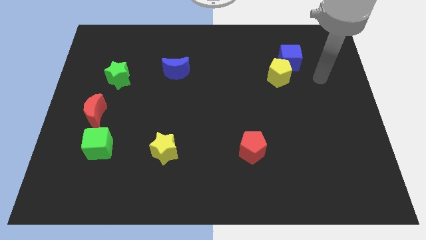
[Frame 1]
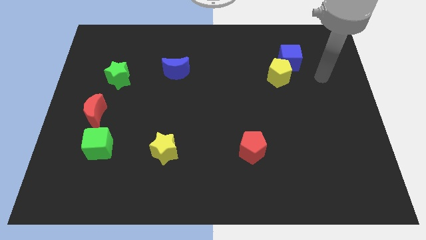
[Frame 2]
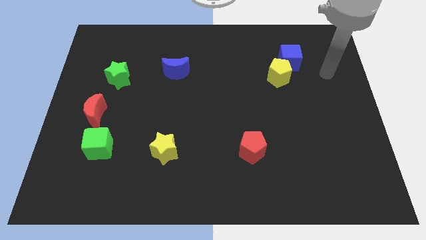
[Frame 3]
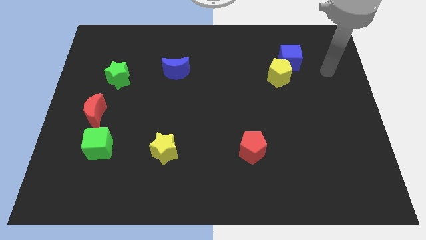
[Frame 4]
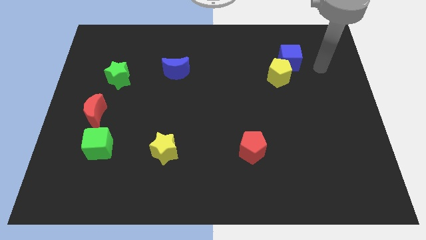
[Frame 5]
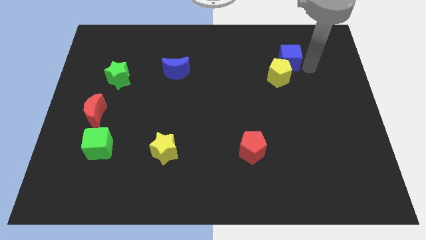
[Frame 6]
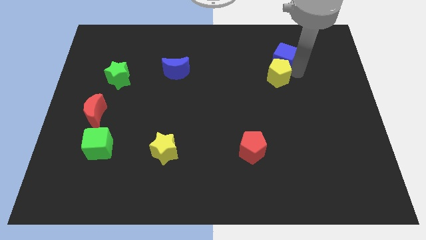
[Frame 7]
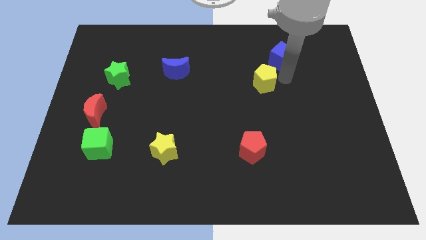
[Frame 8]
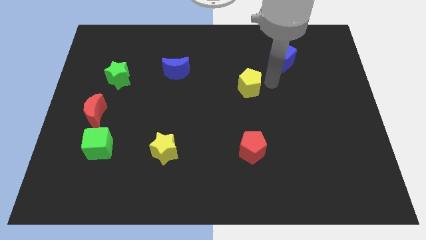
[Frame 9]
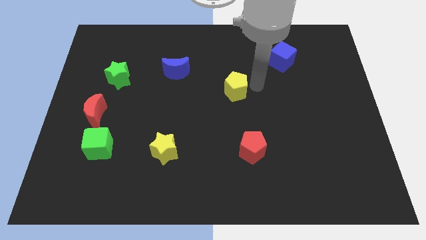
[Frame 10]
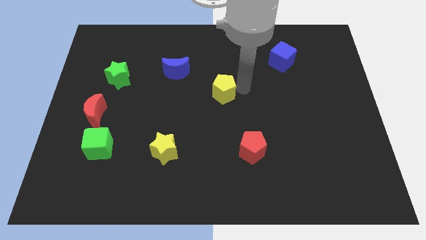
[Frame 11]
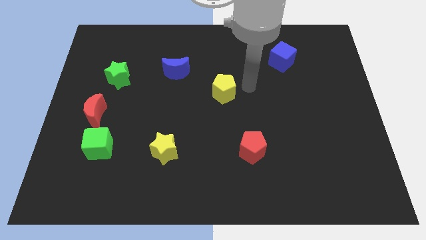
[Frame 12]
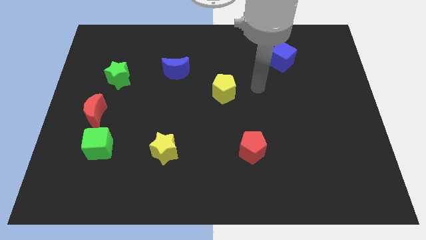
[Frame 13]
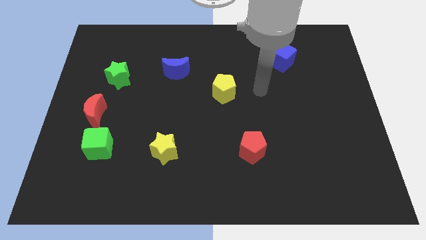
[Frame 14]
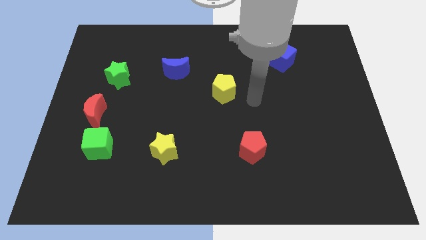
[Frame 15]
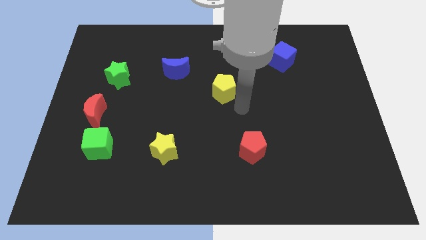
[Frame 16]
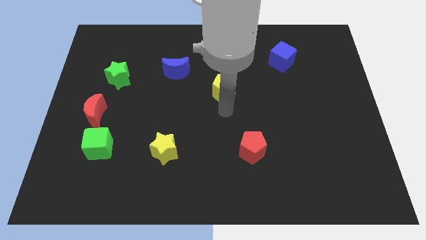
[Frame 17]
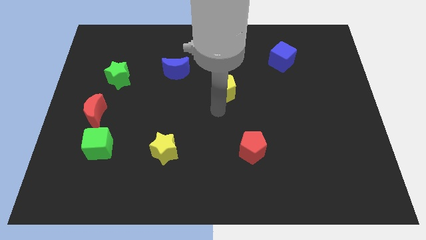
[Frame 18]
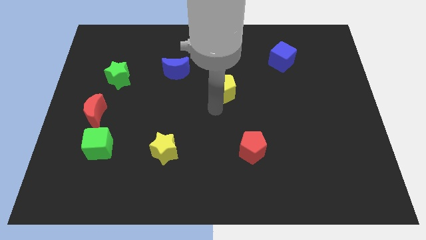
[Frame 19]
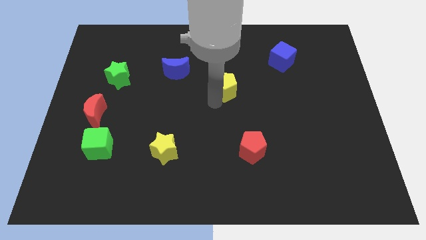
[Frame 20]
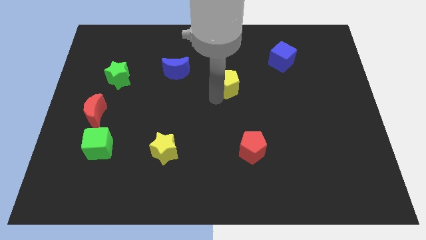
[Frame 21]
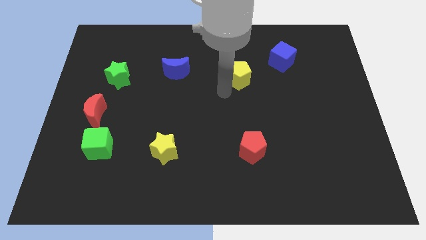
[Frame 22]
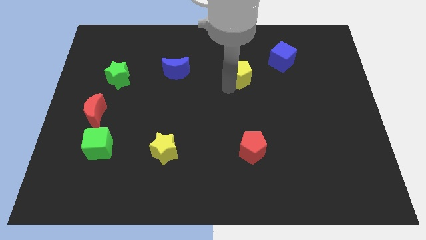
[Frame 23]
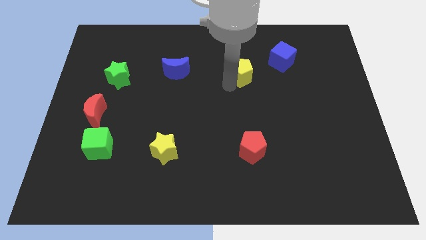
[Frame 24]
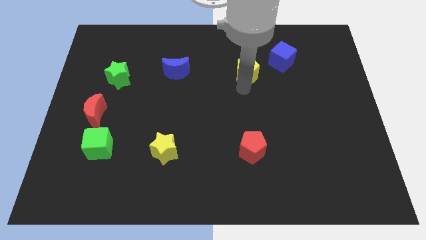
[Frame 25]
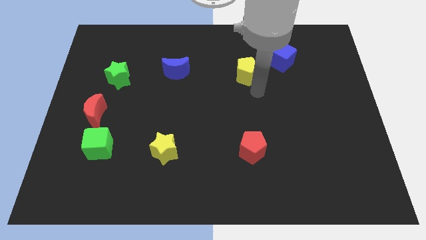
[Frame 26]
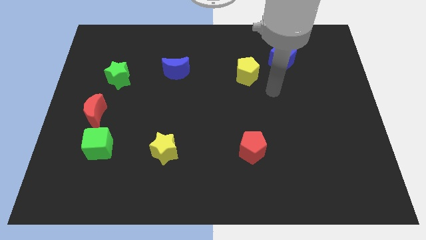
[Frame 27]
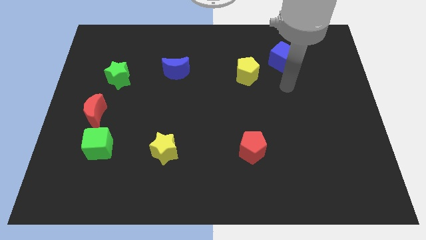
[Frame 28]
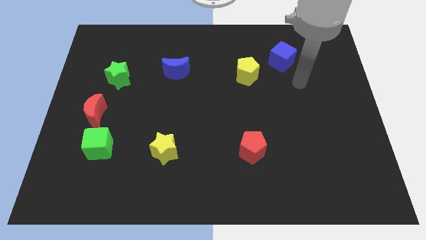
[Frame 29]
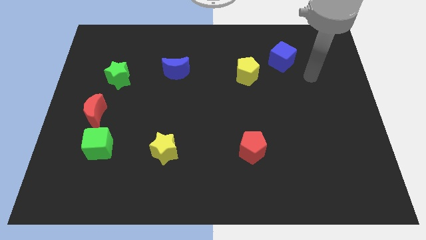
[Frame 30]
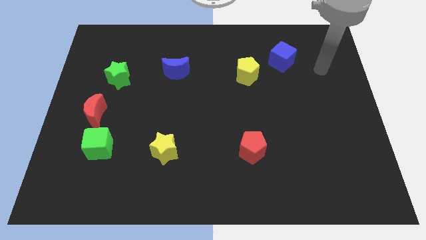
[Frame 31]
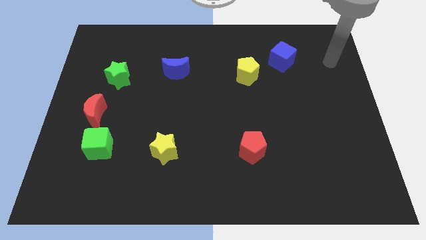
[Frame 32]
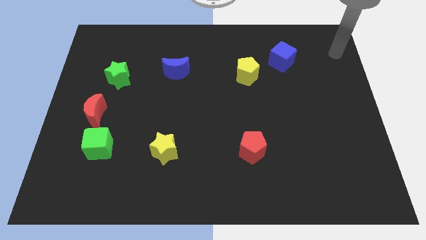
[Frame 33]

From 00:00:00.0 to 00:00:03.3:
separate yellow pentagon from blue cube

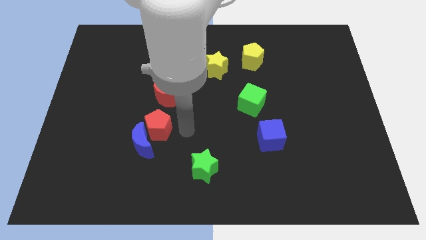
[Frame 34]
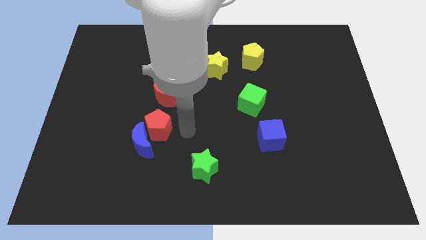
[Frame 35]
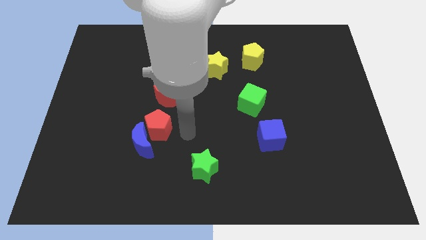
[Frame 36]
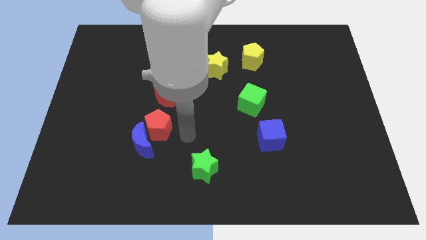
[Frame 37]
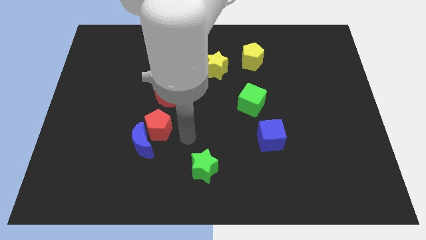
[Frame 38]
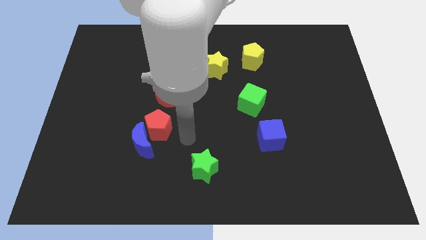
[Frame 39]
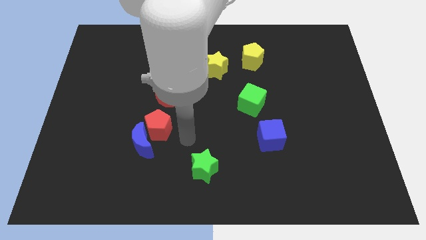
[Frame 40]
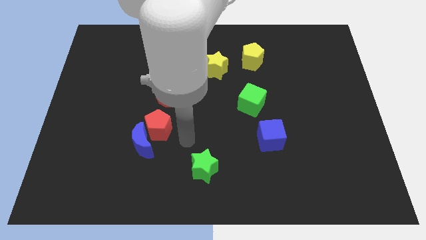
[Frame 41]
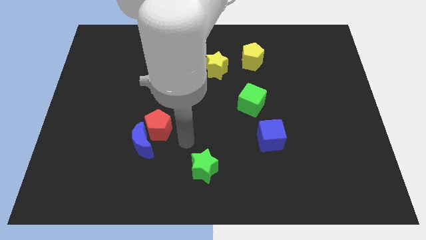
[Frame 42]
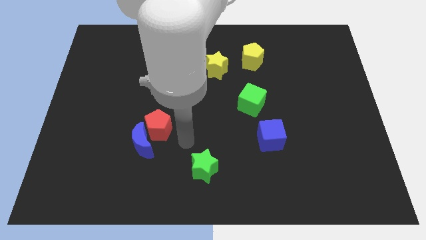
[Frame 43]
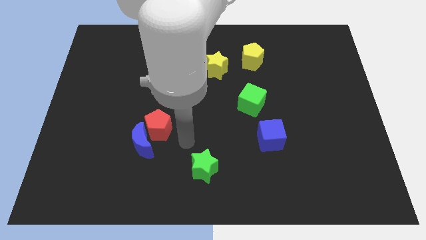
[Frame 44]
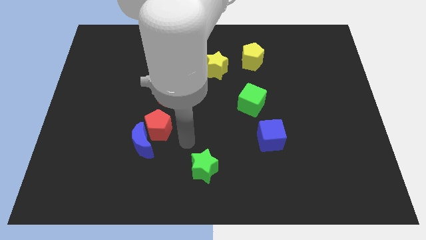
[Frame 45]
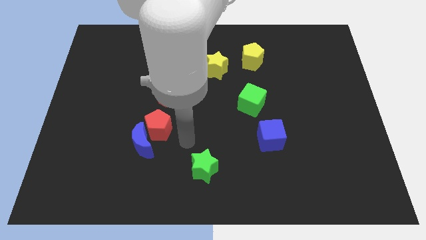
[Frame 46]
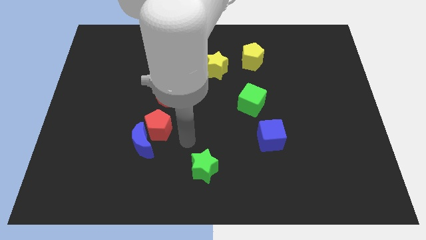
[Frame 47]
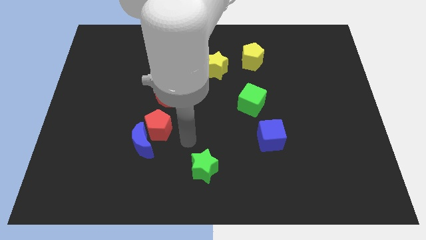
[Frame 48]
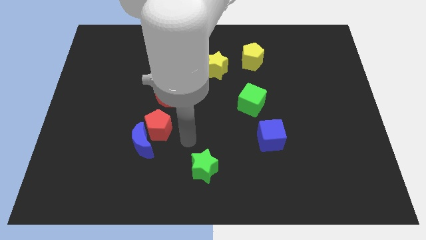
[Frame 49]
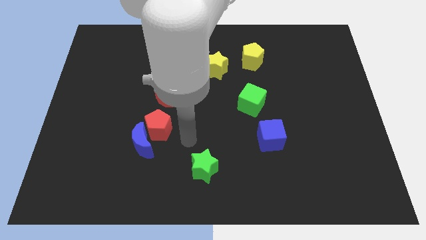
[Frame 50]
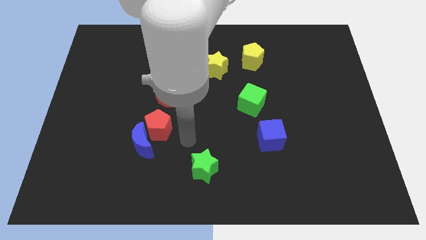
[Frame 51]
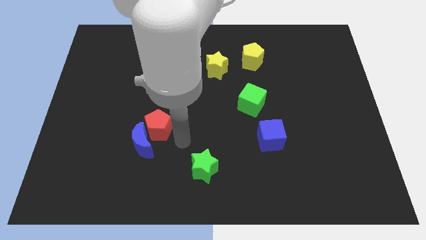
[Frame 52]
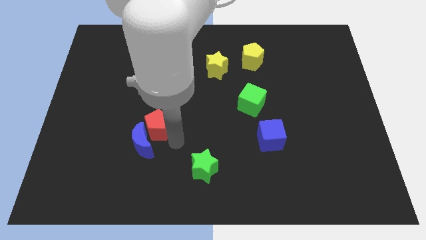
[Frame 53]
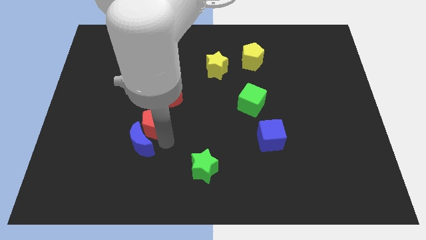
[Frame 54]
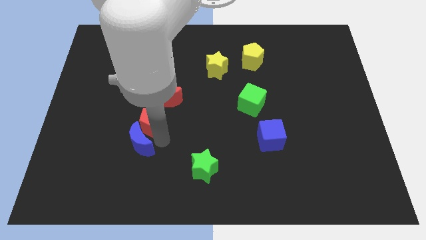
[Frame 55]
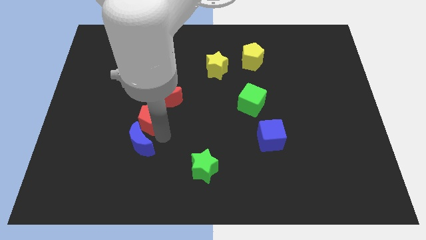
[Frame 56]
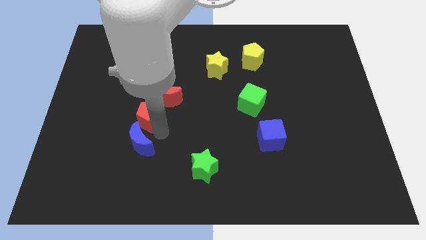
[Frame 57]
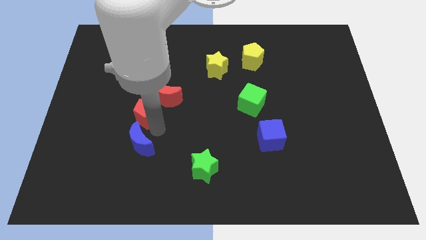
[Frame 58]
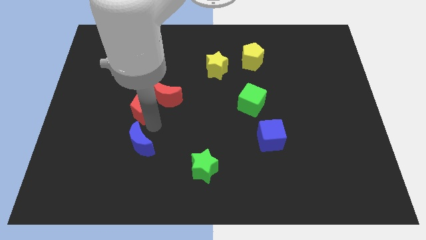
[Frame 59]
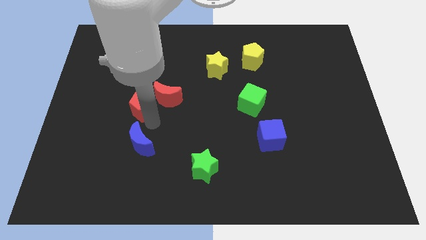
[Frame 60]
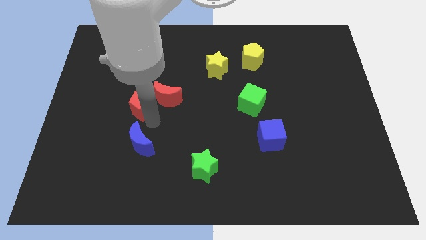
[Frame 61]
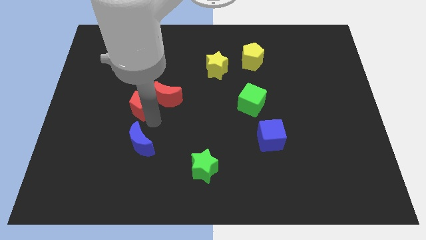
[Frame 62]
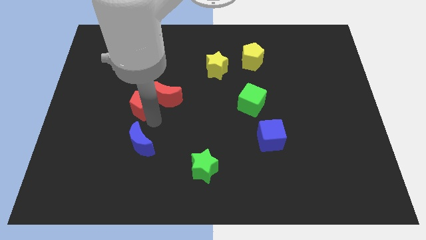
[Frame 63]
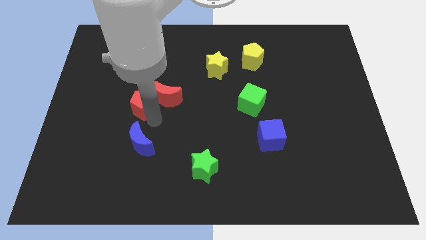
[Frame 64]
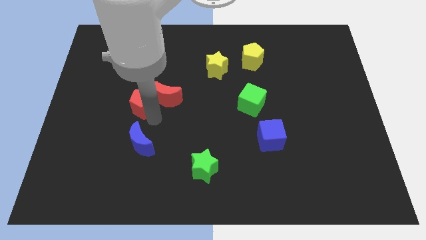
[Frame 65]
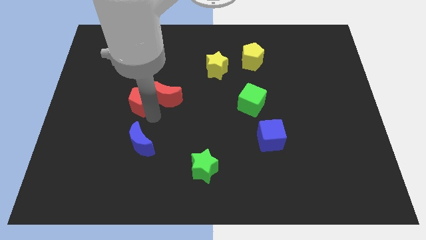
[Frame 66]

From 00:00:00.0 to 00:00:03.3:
move the red pentagon away from the blue crescent

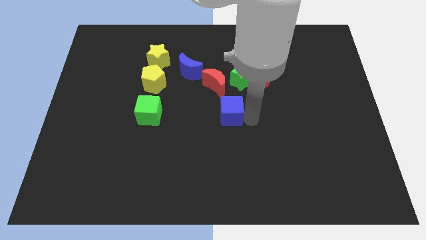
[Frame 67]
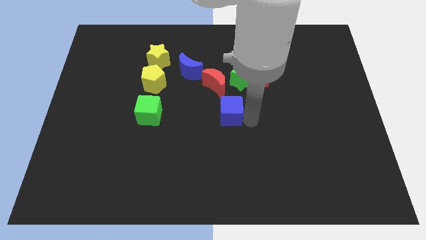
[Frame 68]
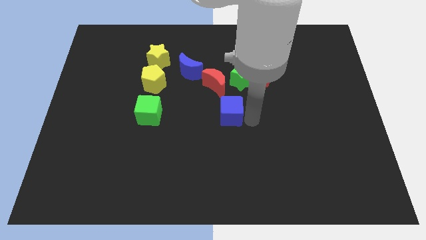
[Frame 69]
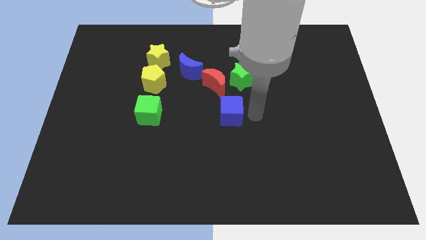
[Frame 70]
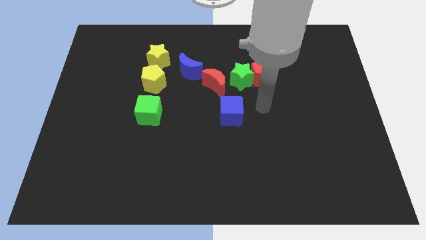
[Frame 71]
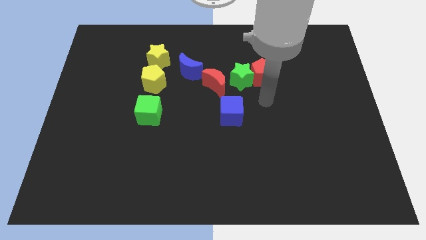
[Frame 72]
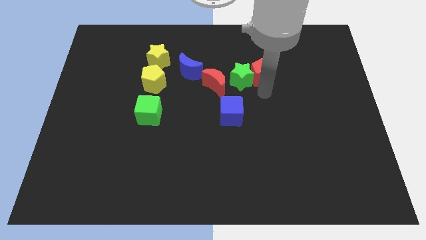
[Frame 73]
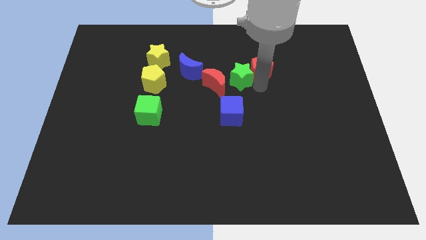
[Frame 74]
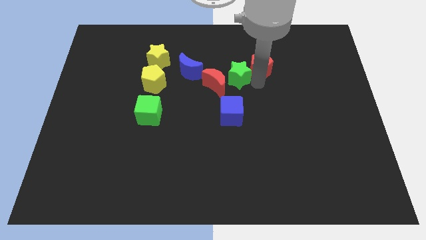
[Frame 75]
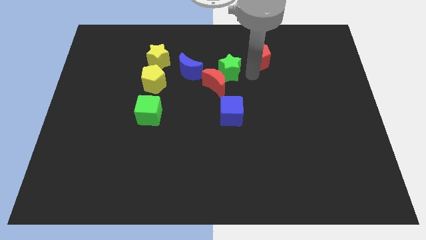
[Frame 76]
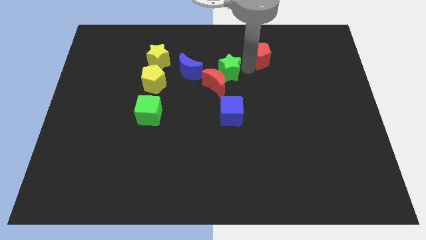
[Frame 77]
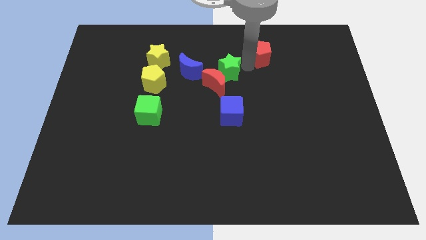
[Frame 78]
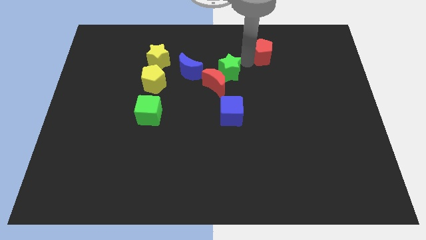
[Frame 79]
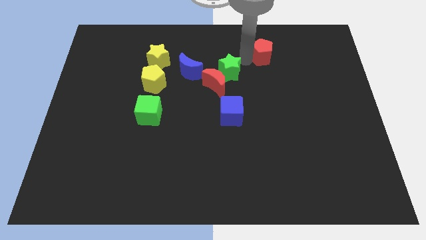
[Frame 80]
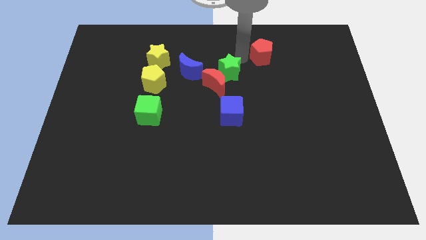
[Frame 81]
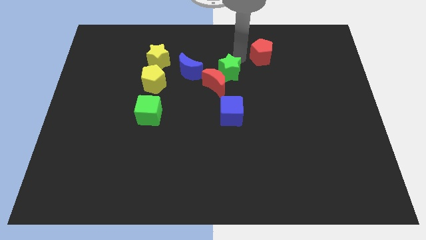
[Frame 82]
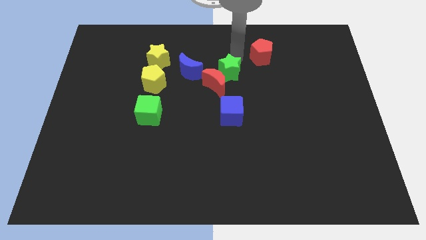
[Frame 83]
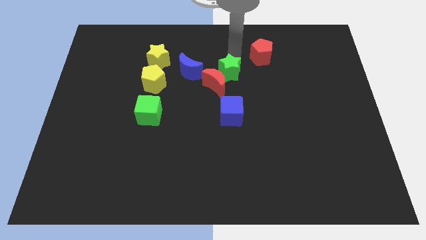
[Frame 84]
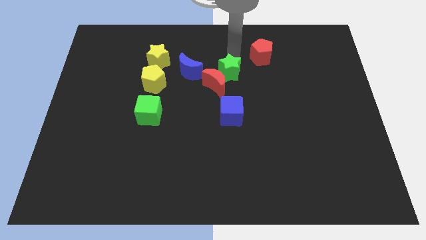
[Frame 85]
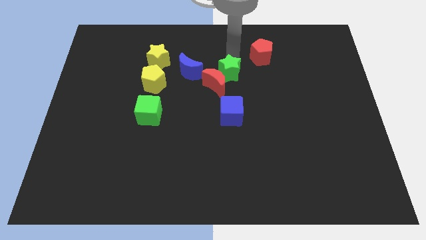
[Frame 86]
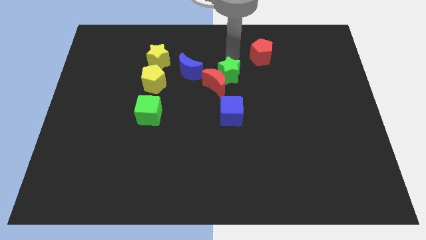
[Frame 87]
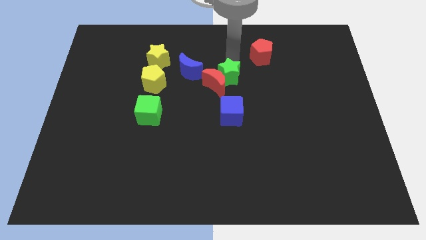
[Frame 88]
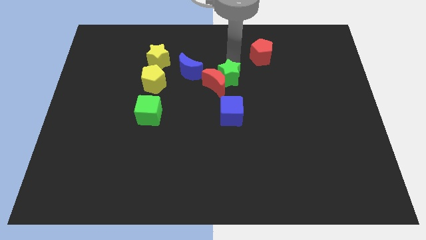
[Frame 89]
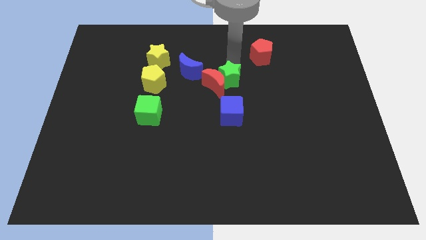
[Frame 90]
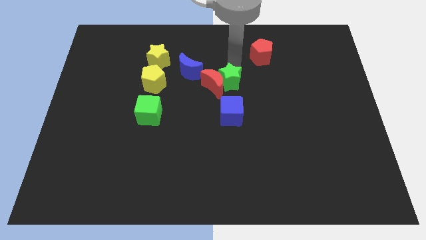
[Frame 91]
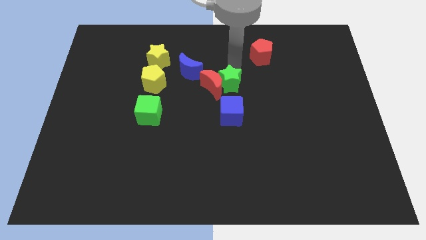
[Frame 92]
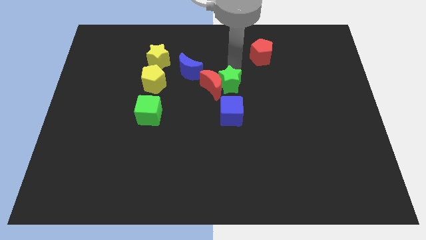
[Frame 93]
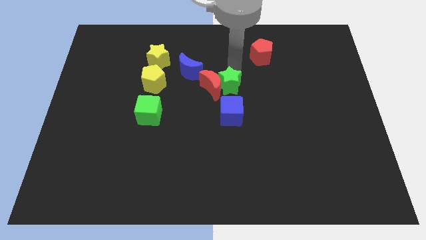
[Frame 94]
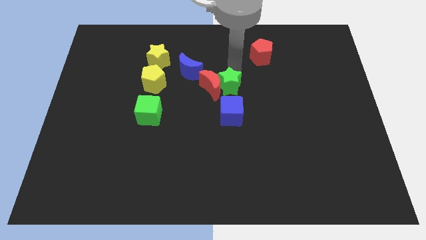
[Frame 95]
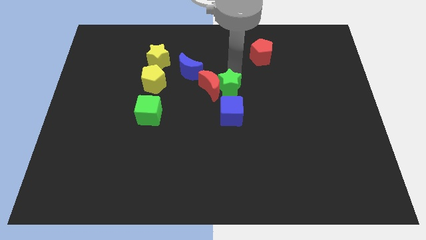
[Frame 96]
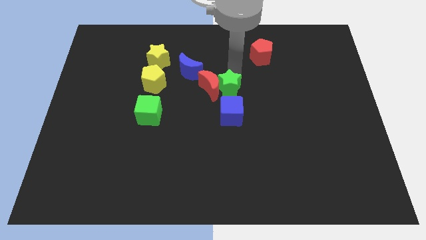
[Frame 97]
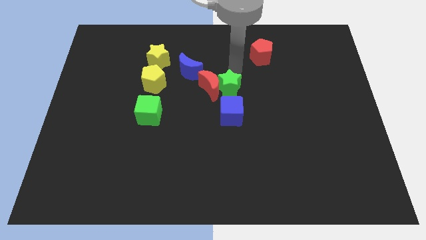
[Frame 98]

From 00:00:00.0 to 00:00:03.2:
slide the green star towards the right side of the red moon
